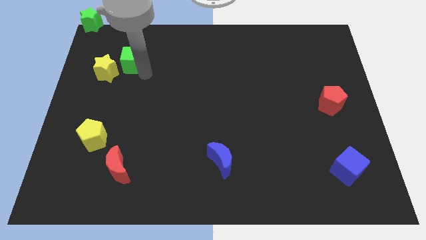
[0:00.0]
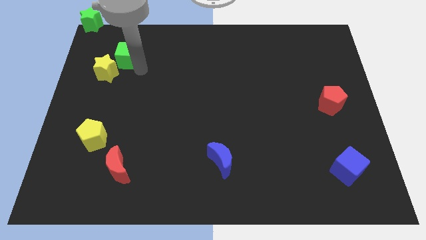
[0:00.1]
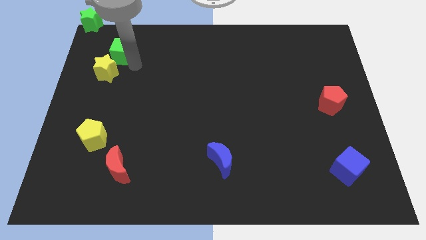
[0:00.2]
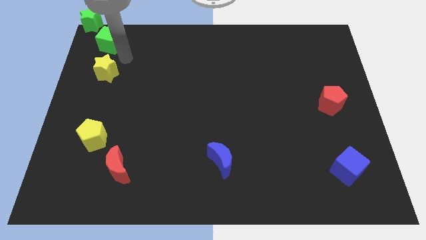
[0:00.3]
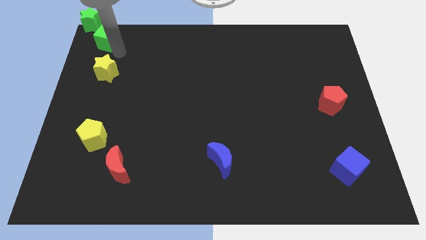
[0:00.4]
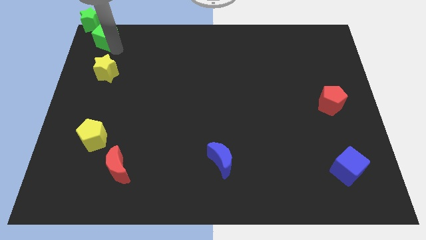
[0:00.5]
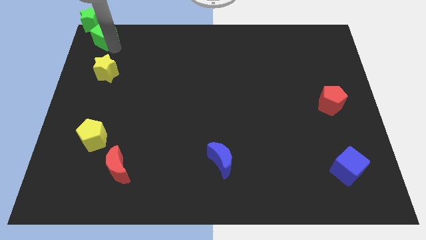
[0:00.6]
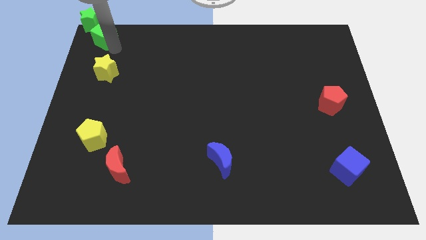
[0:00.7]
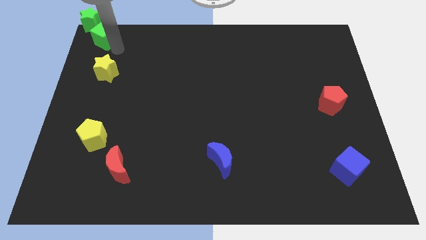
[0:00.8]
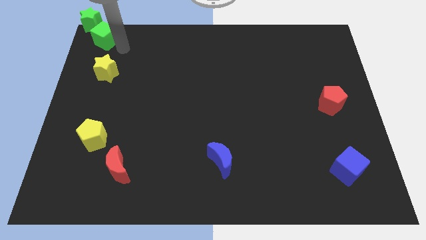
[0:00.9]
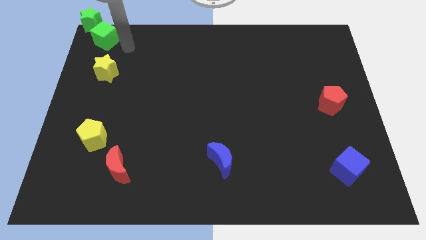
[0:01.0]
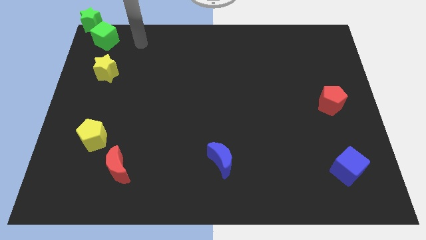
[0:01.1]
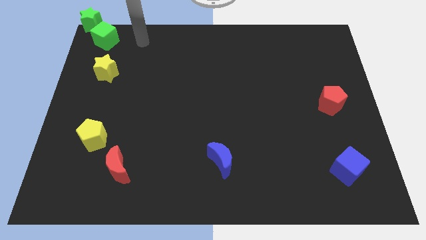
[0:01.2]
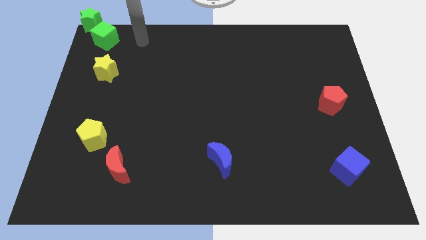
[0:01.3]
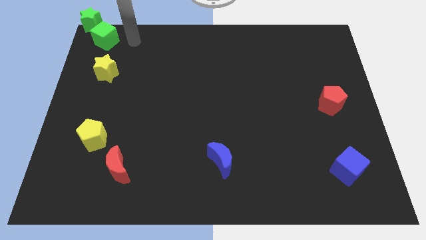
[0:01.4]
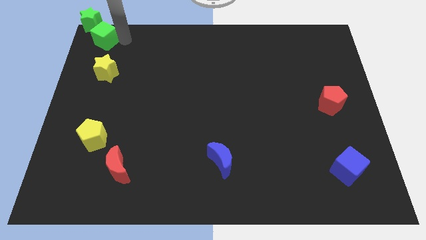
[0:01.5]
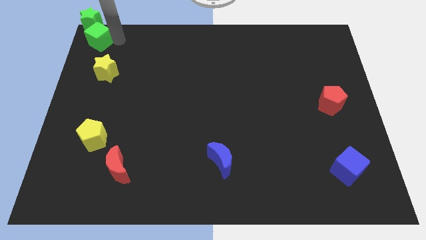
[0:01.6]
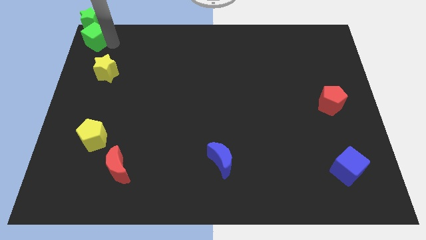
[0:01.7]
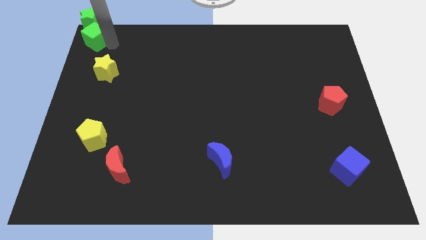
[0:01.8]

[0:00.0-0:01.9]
move the green cube below the green star

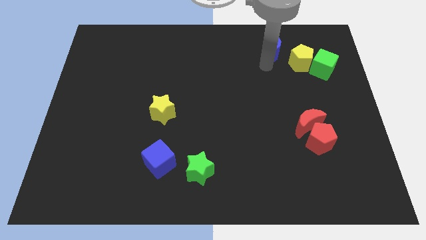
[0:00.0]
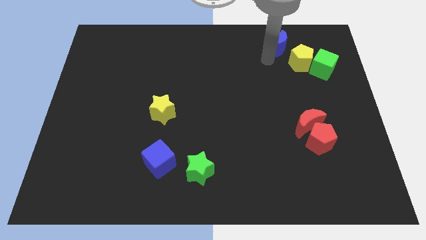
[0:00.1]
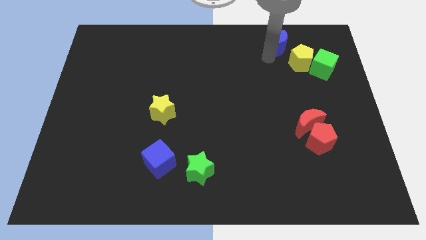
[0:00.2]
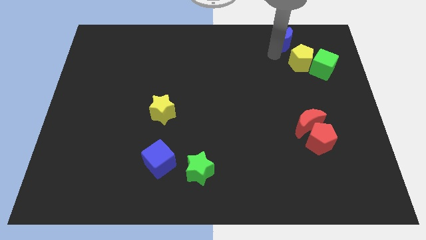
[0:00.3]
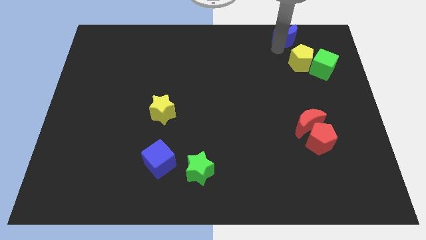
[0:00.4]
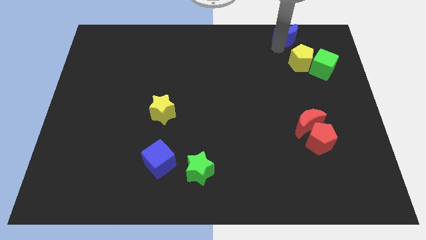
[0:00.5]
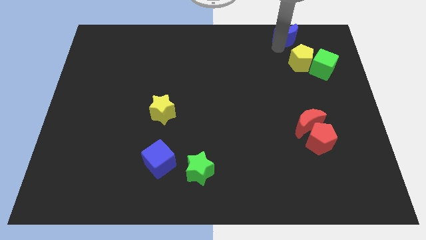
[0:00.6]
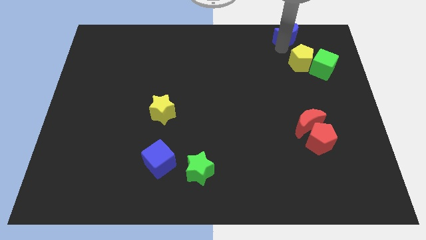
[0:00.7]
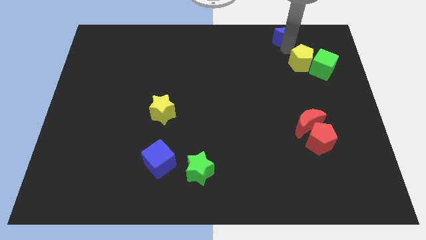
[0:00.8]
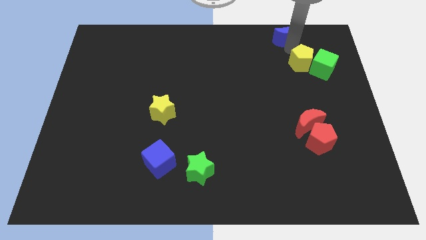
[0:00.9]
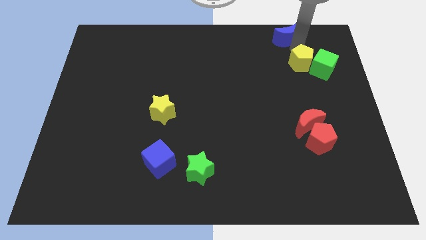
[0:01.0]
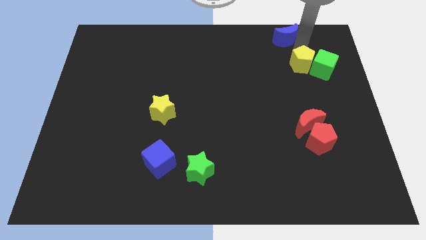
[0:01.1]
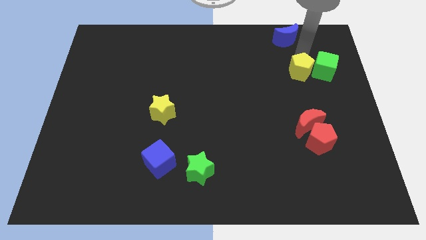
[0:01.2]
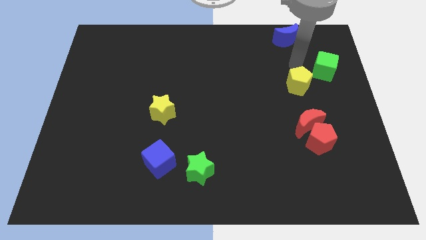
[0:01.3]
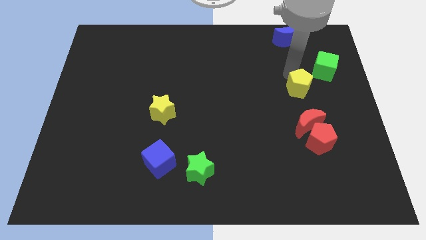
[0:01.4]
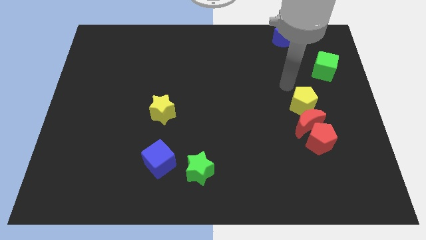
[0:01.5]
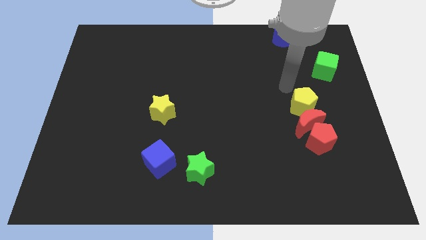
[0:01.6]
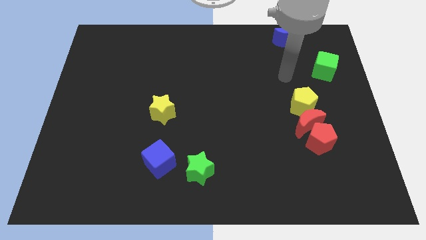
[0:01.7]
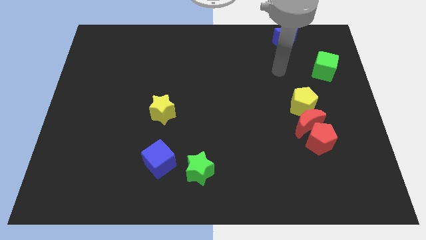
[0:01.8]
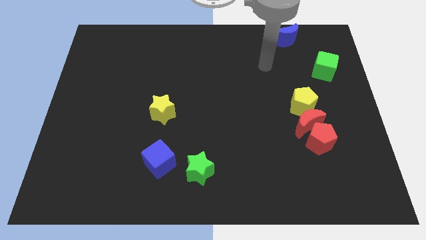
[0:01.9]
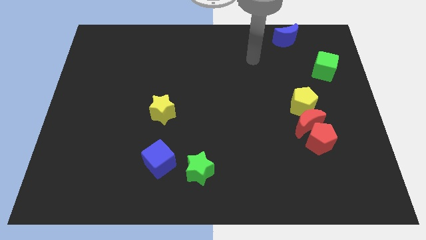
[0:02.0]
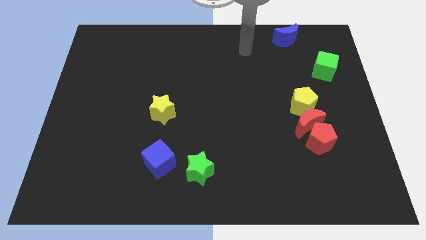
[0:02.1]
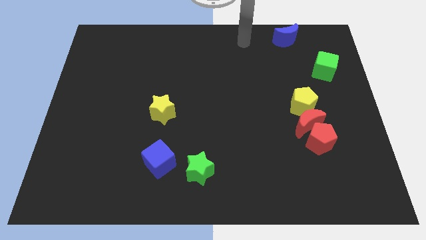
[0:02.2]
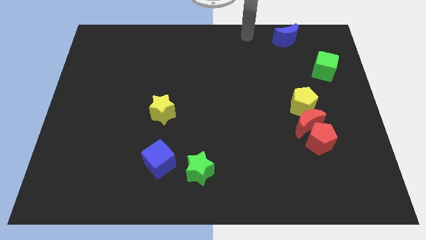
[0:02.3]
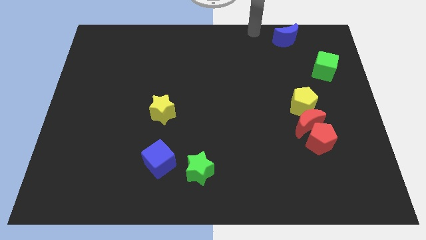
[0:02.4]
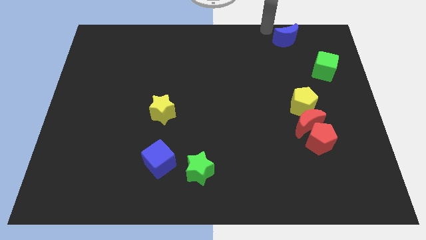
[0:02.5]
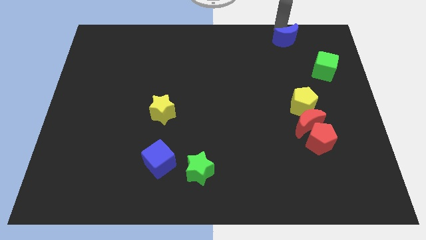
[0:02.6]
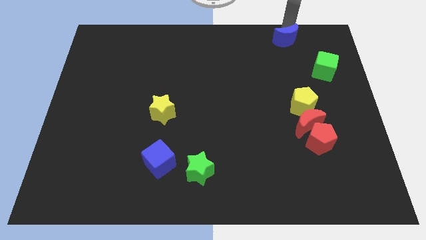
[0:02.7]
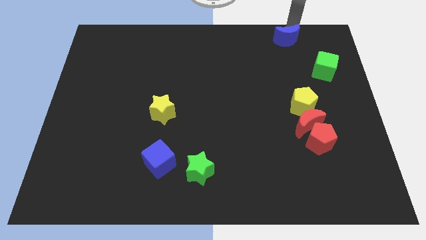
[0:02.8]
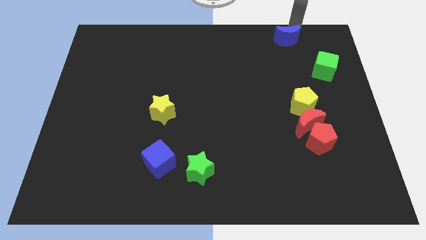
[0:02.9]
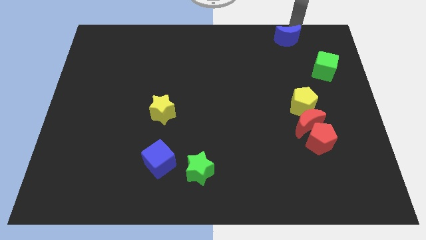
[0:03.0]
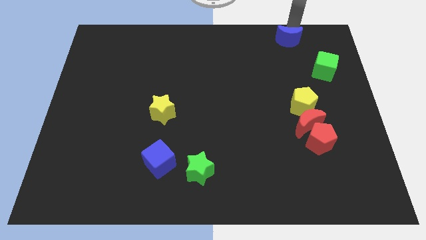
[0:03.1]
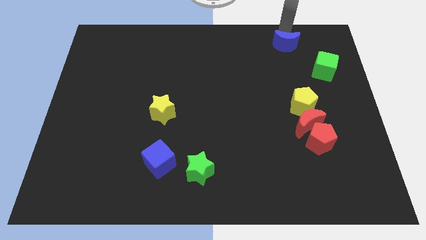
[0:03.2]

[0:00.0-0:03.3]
move the blue moon close to the top right side

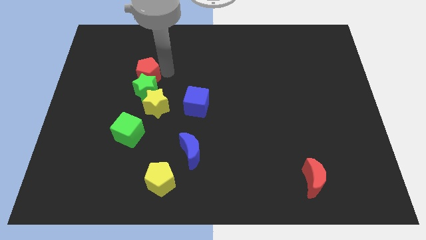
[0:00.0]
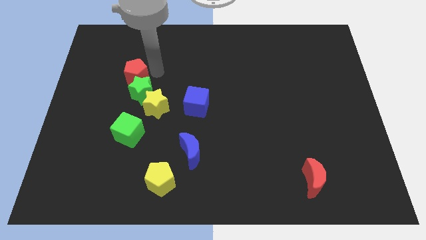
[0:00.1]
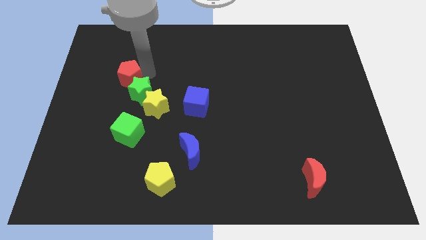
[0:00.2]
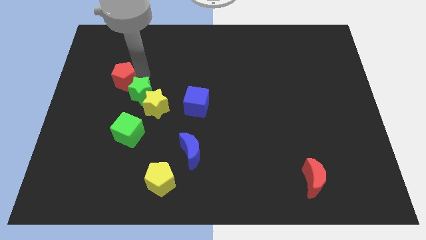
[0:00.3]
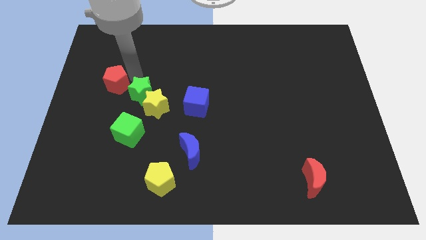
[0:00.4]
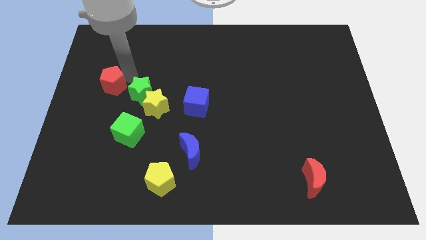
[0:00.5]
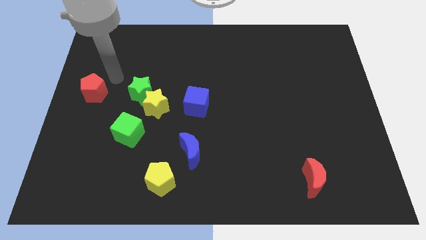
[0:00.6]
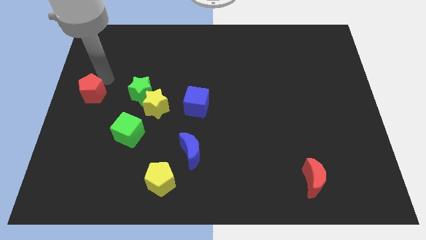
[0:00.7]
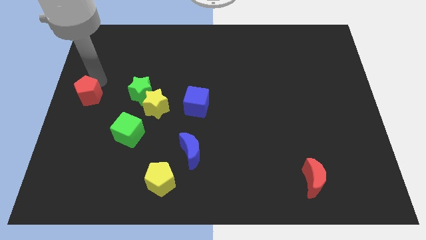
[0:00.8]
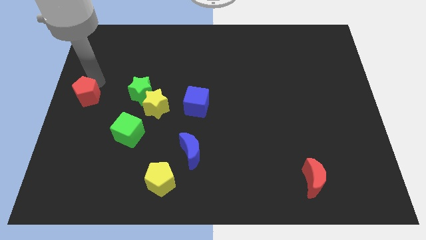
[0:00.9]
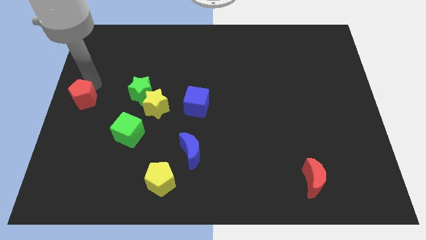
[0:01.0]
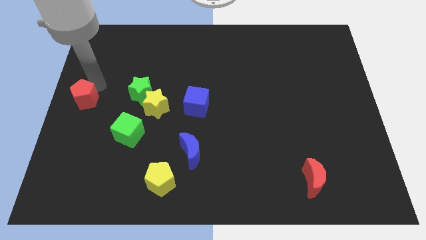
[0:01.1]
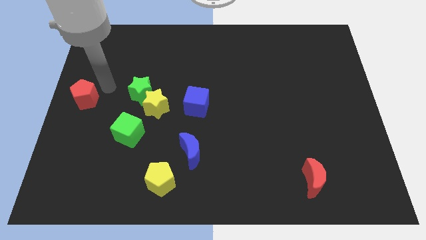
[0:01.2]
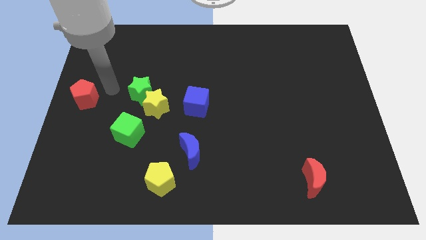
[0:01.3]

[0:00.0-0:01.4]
separate the red pentagon from the green star

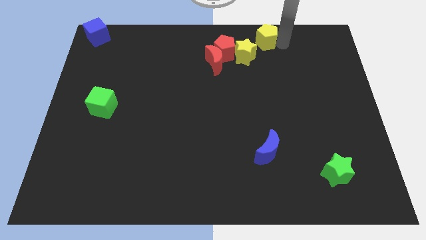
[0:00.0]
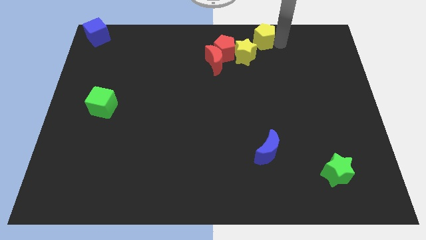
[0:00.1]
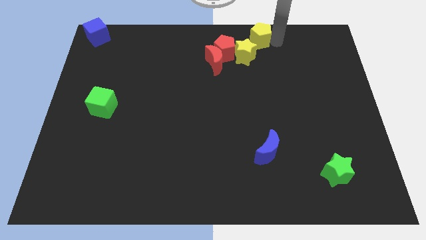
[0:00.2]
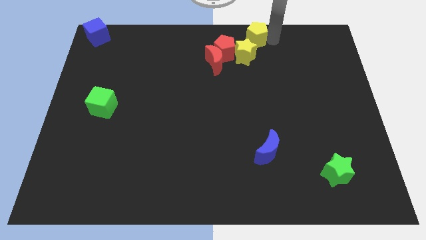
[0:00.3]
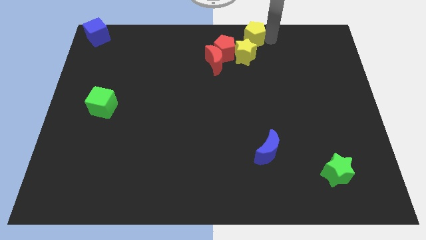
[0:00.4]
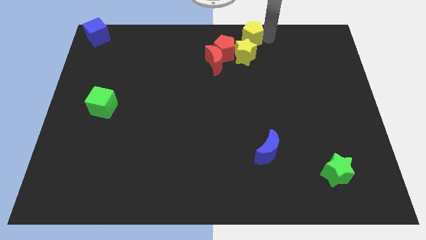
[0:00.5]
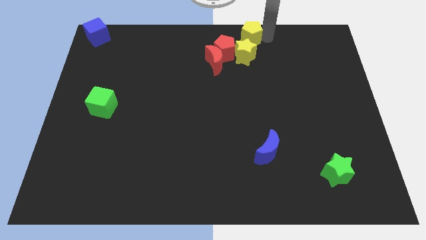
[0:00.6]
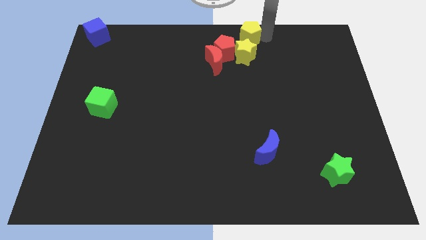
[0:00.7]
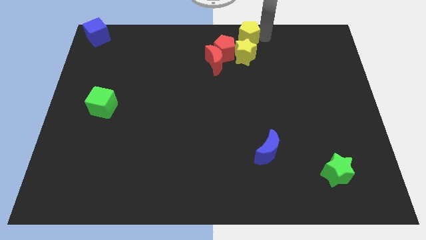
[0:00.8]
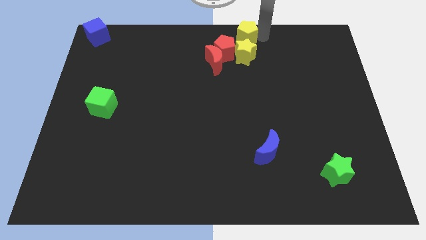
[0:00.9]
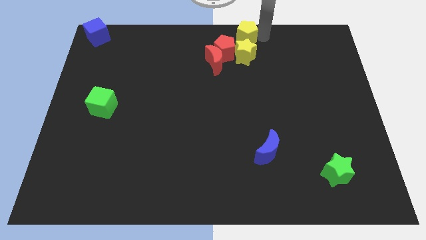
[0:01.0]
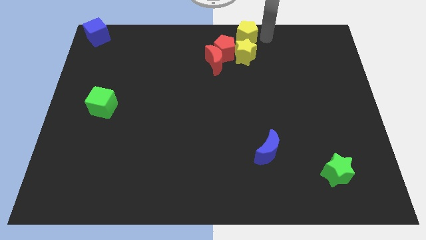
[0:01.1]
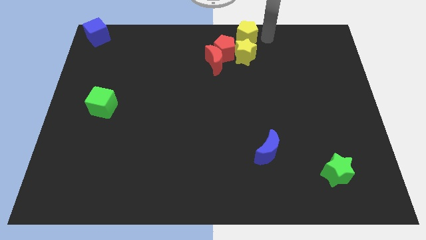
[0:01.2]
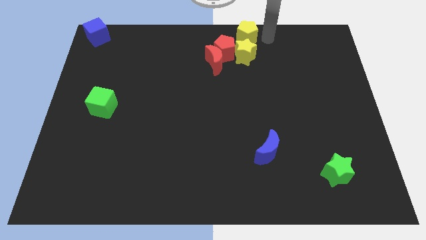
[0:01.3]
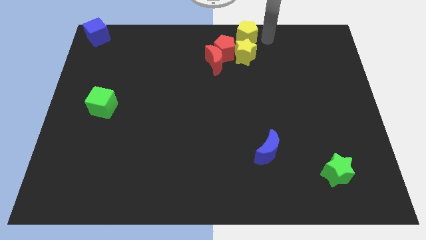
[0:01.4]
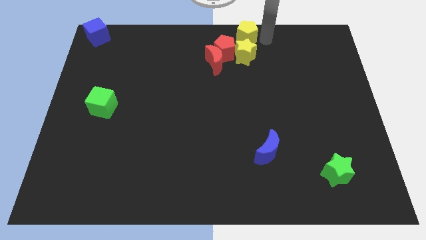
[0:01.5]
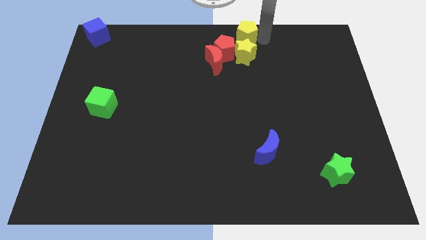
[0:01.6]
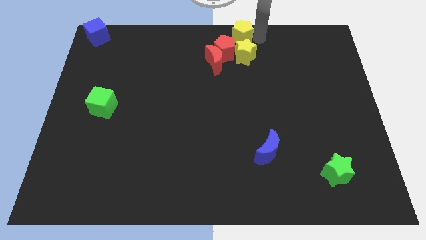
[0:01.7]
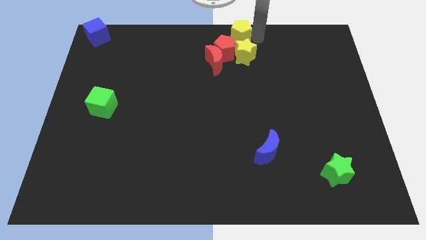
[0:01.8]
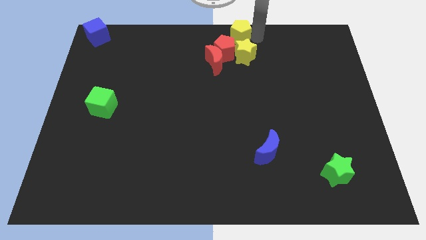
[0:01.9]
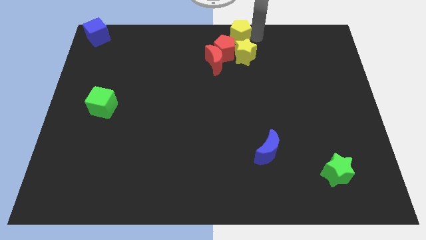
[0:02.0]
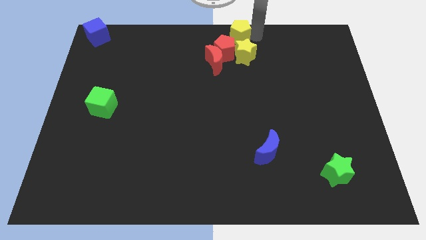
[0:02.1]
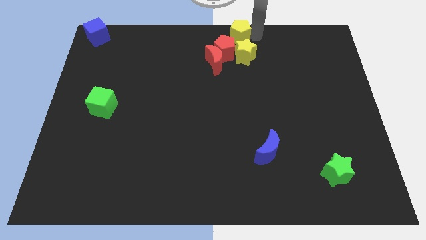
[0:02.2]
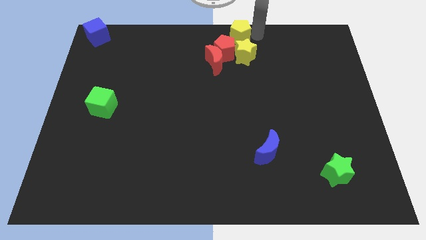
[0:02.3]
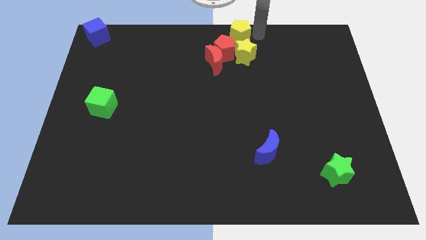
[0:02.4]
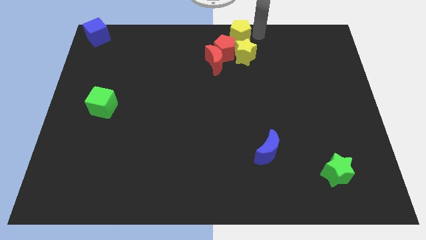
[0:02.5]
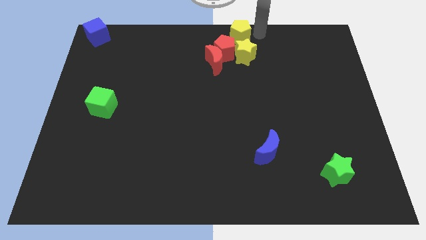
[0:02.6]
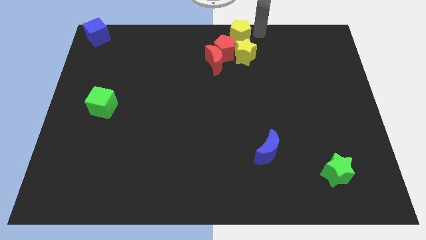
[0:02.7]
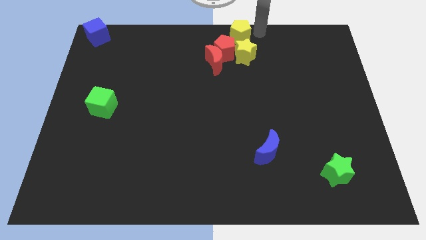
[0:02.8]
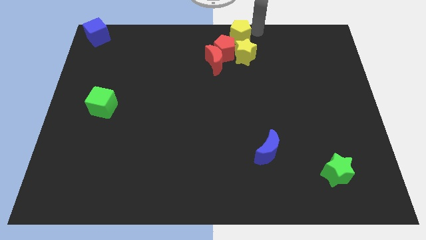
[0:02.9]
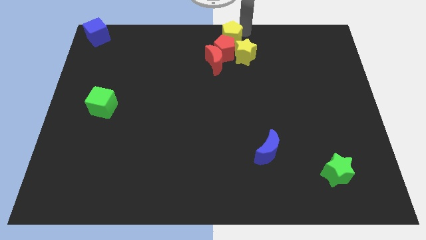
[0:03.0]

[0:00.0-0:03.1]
move the yellow pentagon at the top right of the red pentagon
